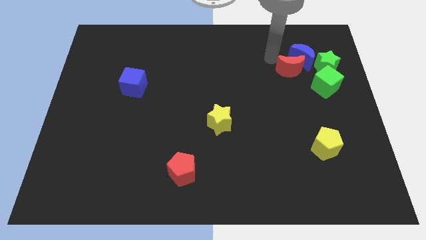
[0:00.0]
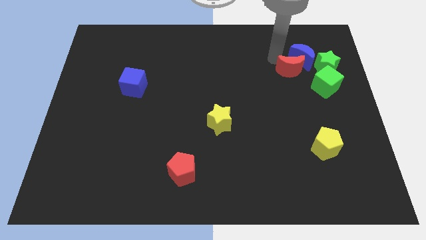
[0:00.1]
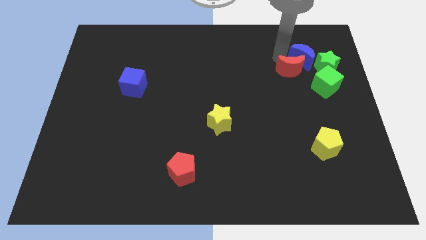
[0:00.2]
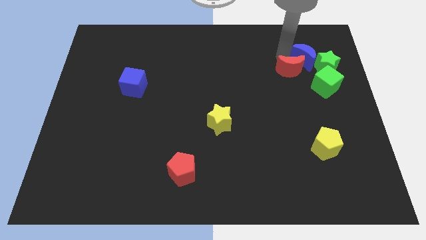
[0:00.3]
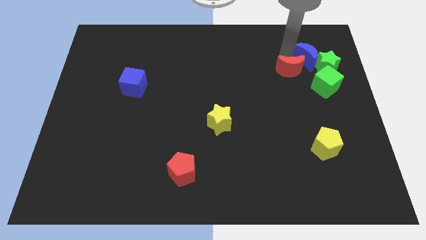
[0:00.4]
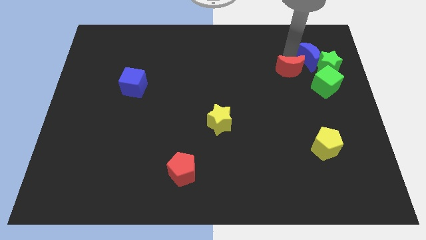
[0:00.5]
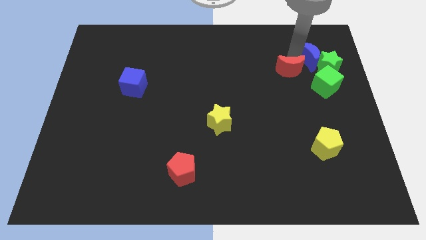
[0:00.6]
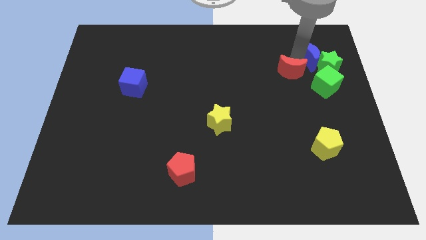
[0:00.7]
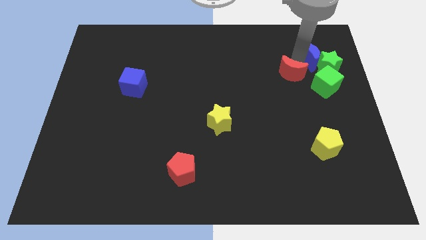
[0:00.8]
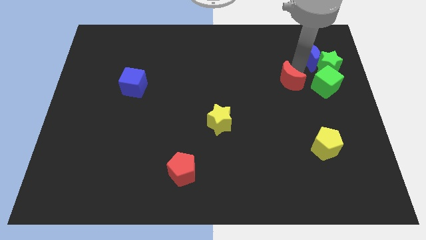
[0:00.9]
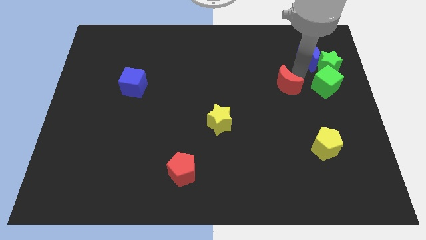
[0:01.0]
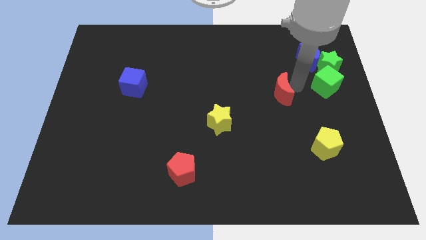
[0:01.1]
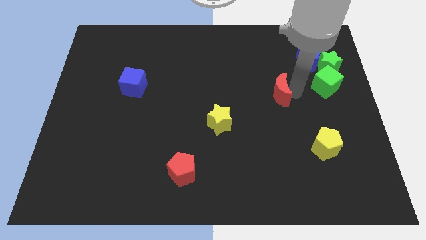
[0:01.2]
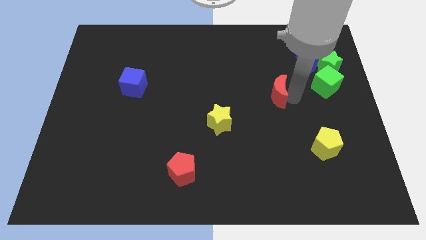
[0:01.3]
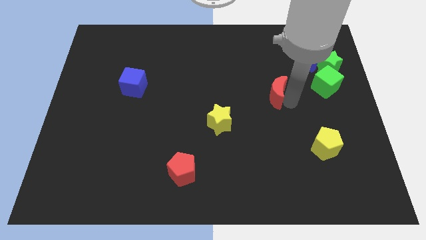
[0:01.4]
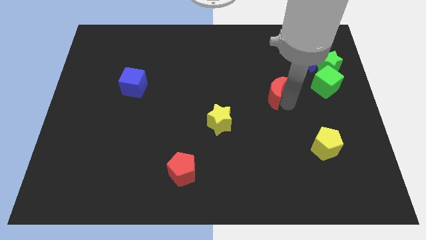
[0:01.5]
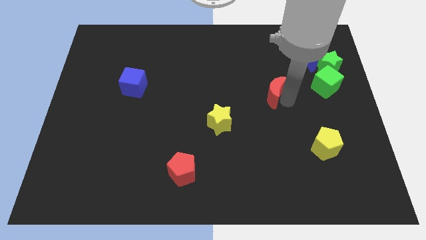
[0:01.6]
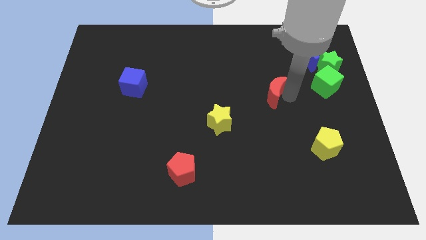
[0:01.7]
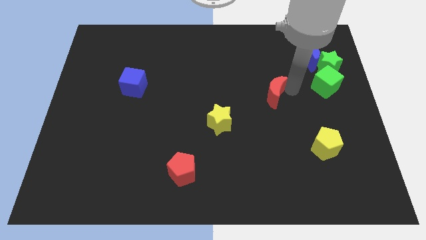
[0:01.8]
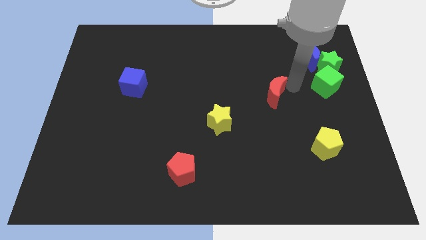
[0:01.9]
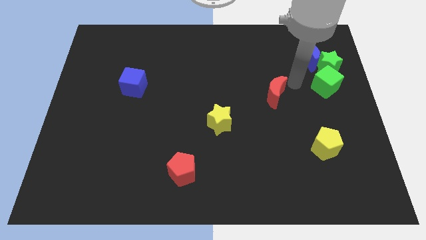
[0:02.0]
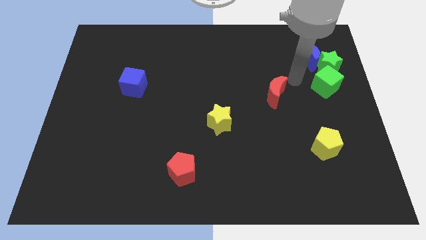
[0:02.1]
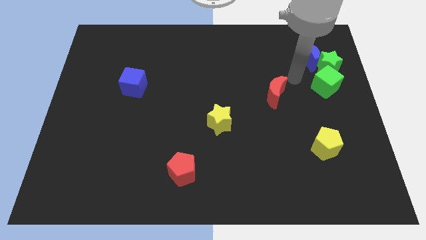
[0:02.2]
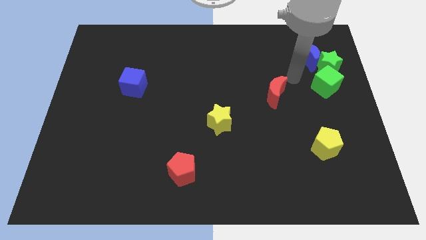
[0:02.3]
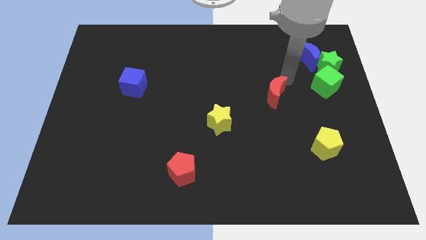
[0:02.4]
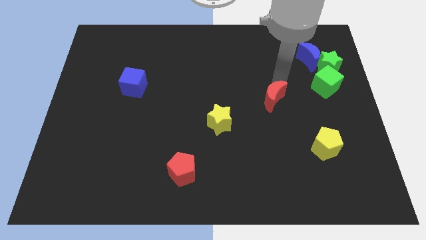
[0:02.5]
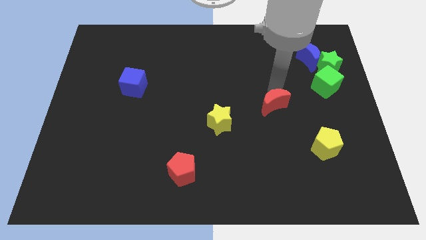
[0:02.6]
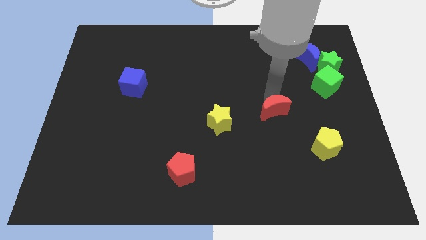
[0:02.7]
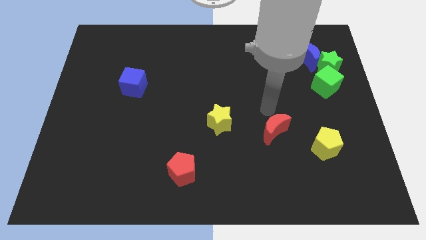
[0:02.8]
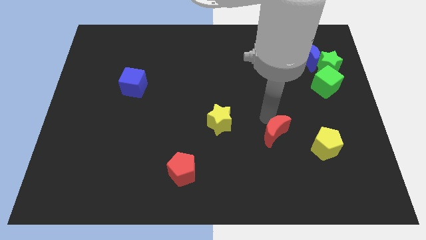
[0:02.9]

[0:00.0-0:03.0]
push the red crescent downwards

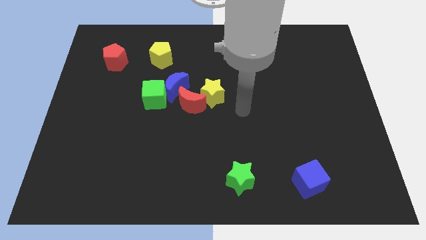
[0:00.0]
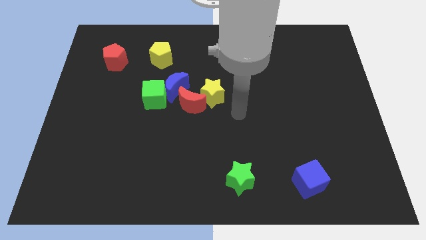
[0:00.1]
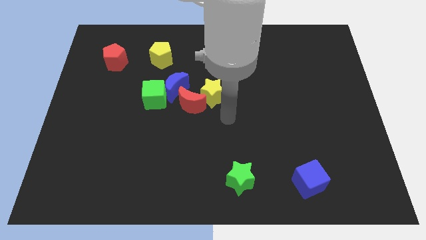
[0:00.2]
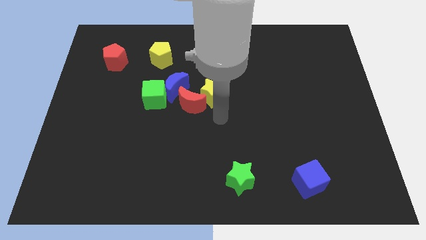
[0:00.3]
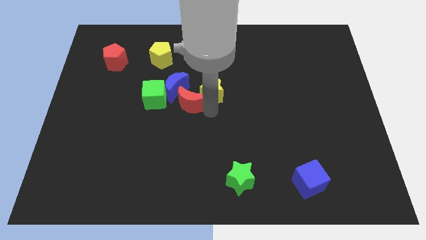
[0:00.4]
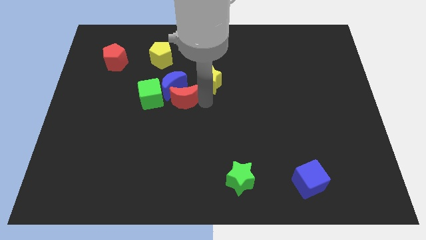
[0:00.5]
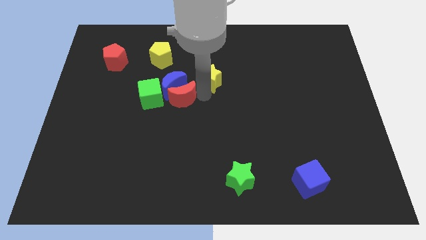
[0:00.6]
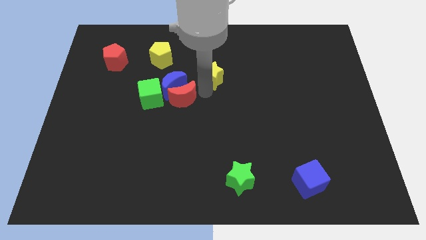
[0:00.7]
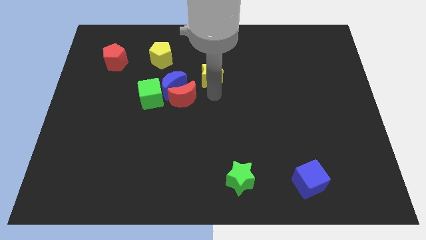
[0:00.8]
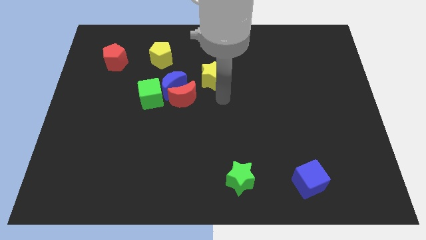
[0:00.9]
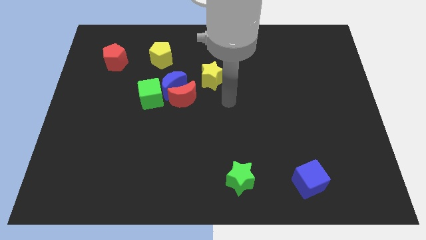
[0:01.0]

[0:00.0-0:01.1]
separate the yellow star from the red crescent

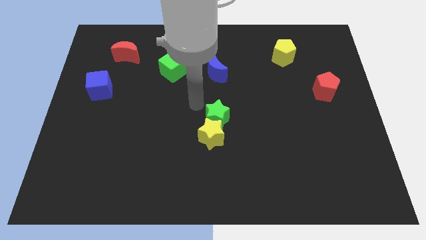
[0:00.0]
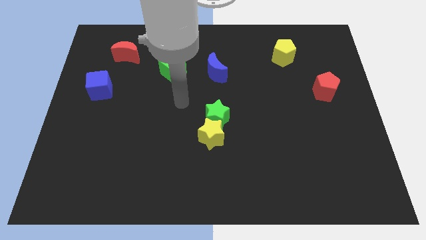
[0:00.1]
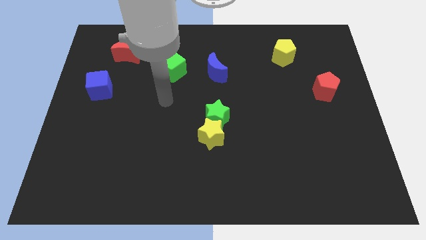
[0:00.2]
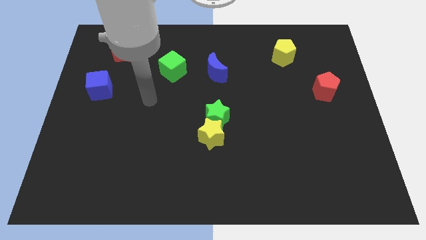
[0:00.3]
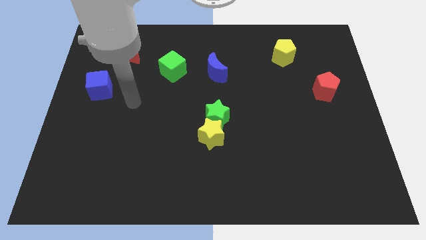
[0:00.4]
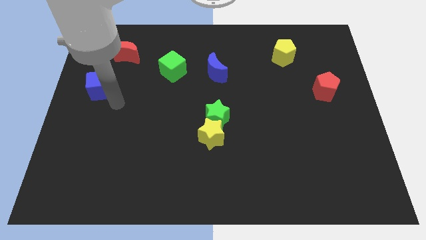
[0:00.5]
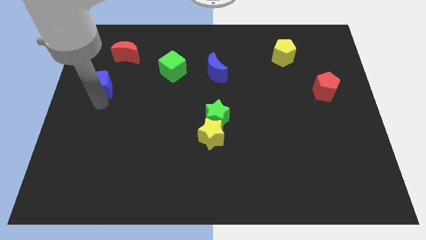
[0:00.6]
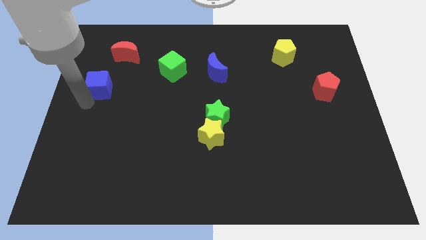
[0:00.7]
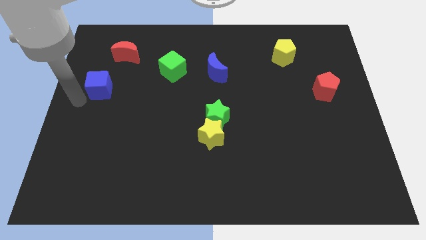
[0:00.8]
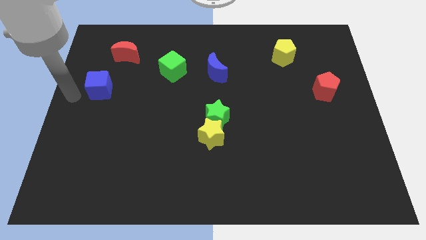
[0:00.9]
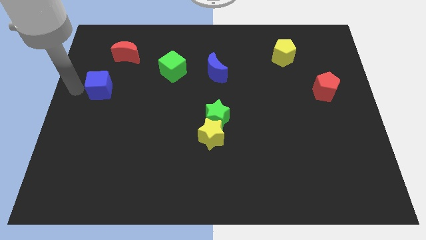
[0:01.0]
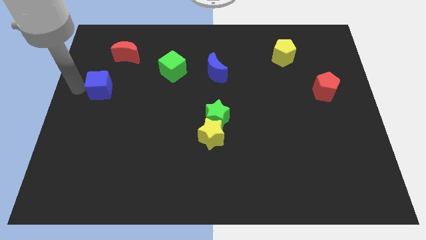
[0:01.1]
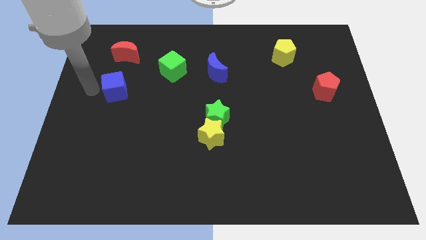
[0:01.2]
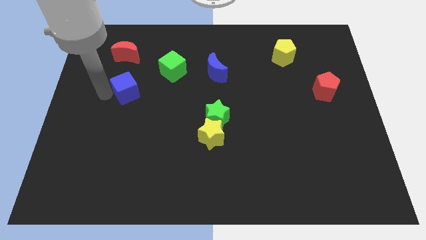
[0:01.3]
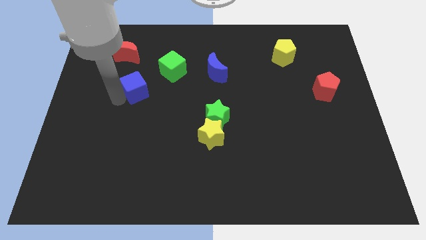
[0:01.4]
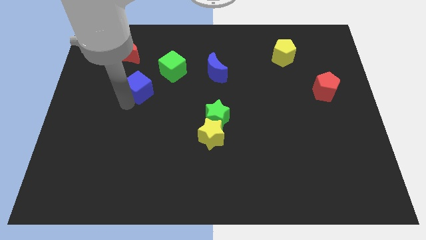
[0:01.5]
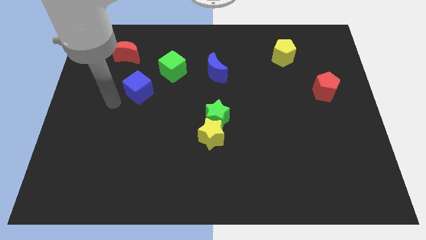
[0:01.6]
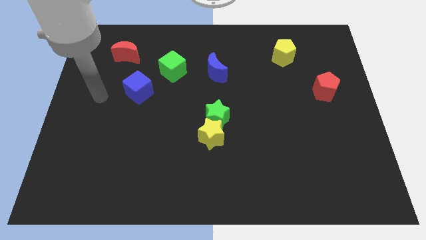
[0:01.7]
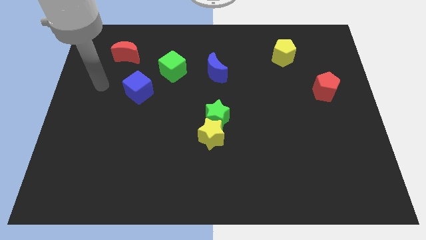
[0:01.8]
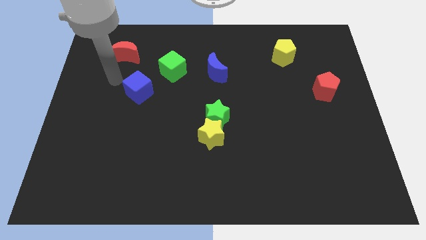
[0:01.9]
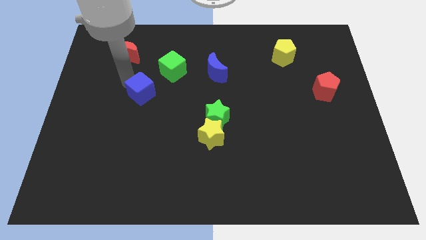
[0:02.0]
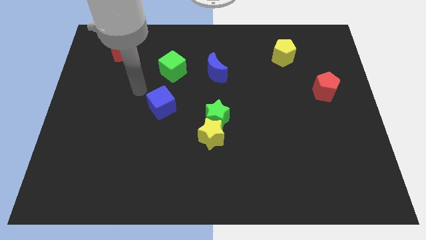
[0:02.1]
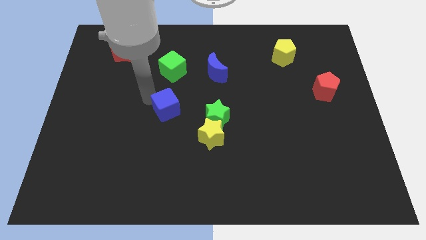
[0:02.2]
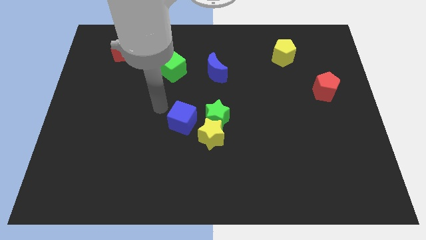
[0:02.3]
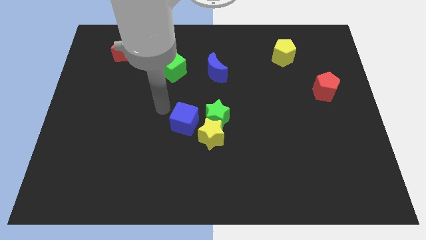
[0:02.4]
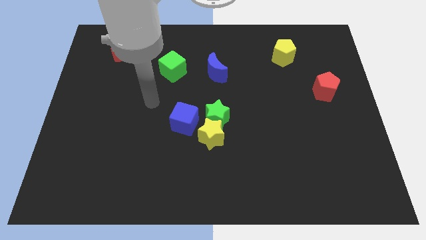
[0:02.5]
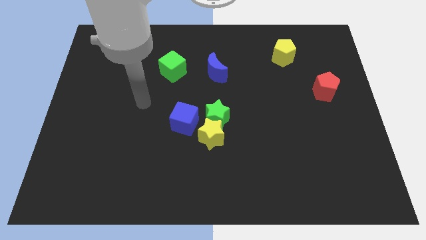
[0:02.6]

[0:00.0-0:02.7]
push the green cube to the center of the board

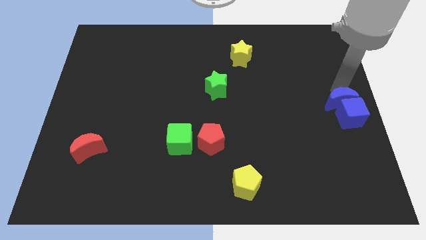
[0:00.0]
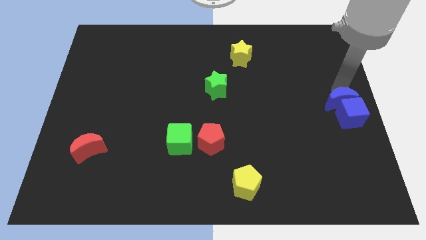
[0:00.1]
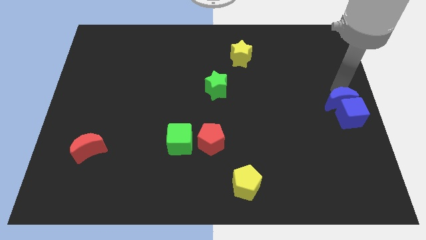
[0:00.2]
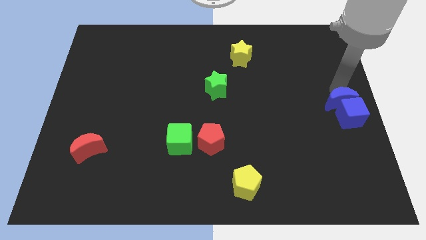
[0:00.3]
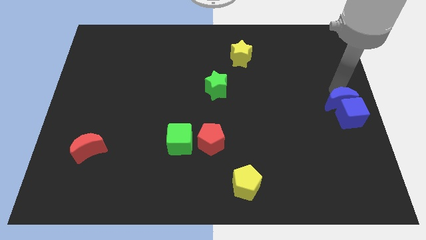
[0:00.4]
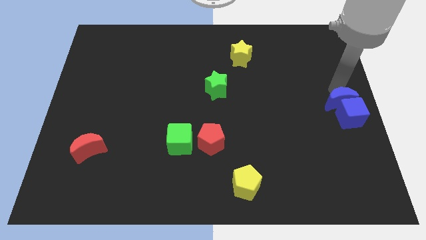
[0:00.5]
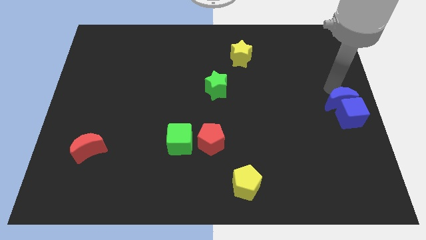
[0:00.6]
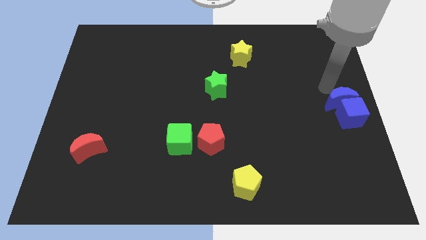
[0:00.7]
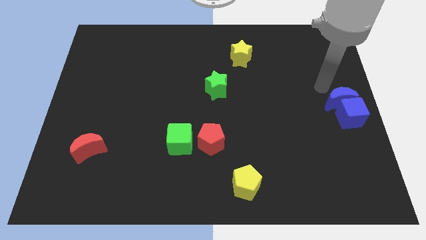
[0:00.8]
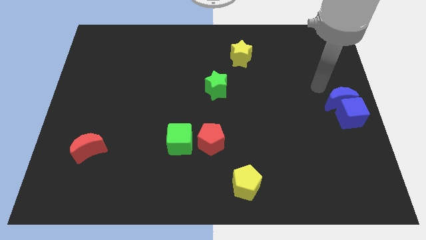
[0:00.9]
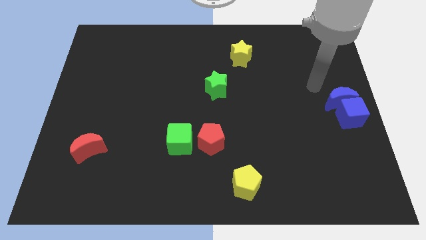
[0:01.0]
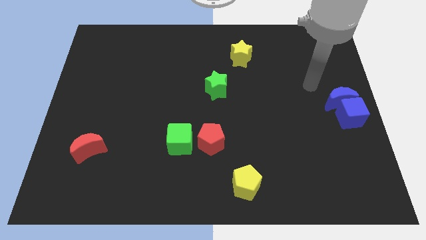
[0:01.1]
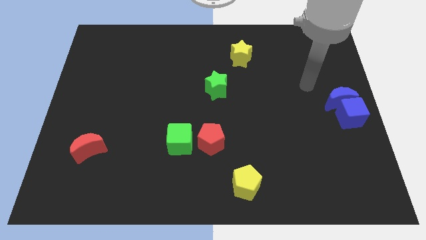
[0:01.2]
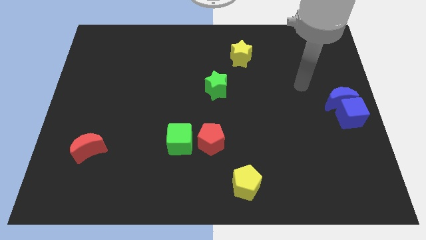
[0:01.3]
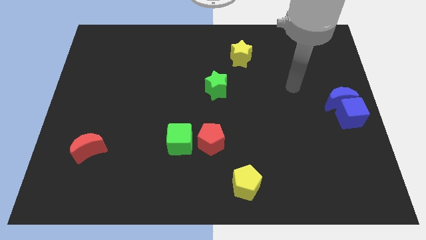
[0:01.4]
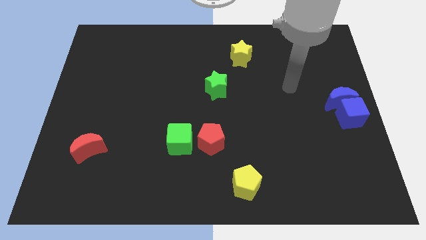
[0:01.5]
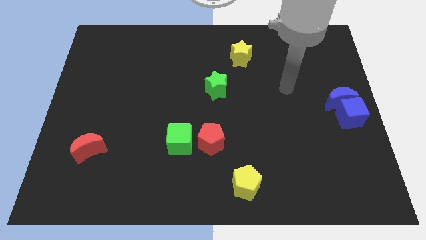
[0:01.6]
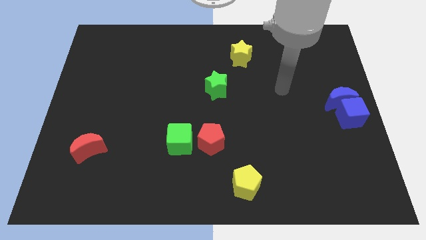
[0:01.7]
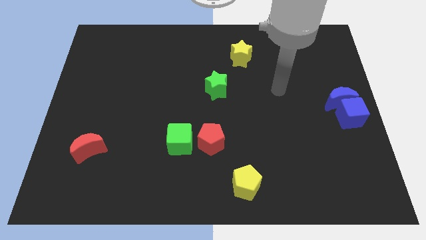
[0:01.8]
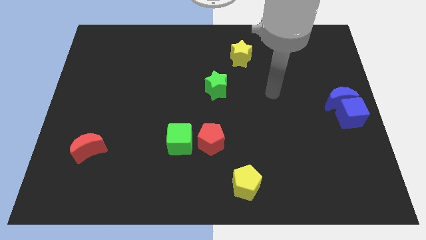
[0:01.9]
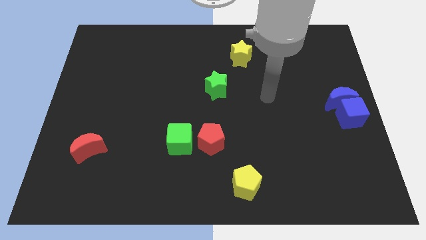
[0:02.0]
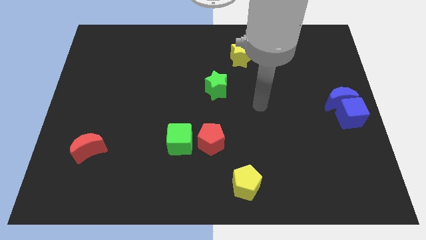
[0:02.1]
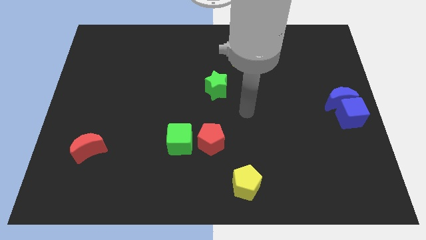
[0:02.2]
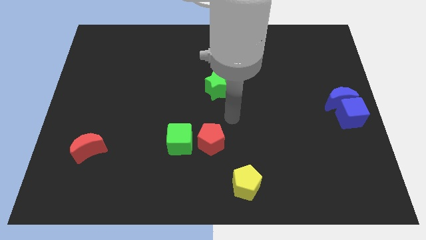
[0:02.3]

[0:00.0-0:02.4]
move your arm away from blue moon
